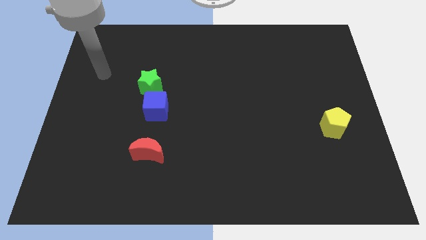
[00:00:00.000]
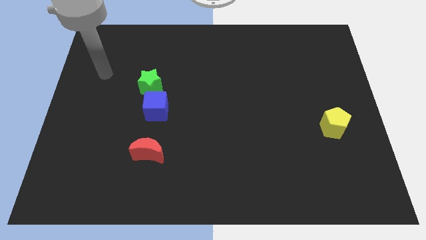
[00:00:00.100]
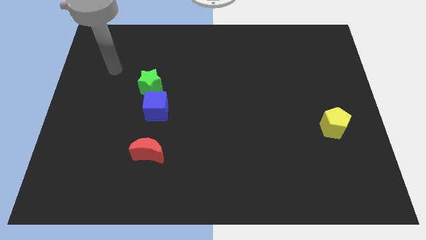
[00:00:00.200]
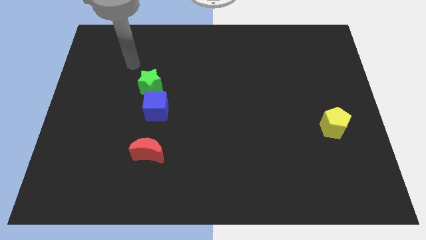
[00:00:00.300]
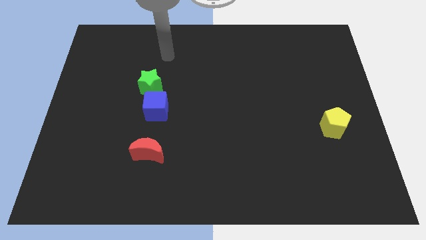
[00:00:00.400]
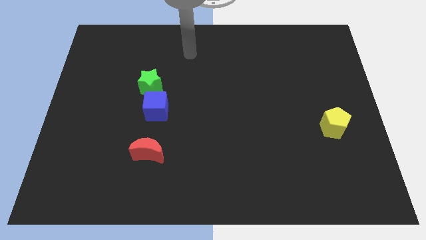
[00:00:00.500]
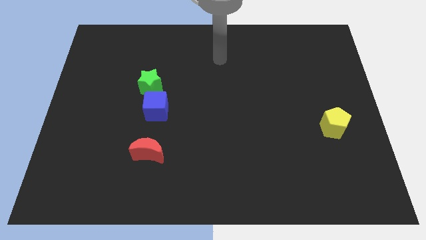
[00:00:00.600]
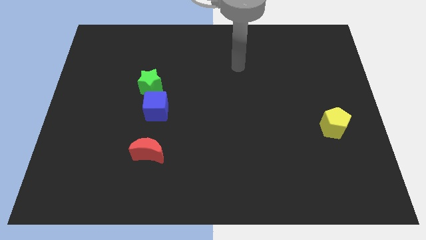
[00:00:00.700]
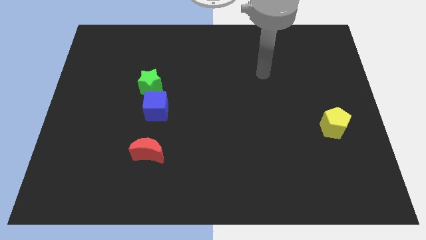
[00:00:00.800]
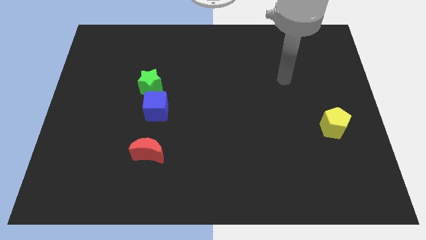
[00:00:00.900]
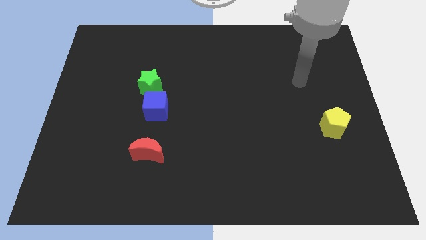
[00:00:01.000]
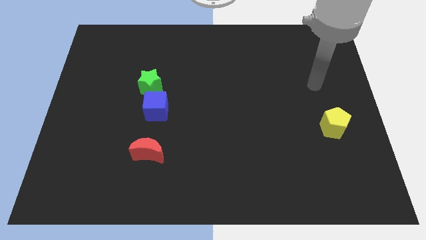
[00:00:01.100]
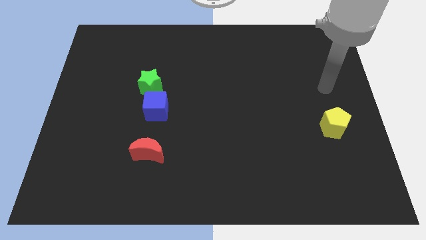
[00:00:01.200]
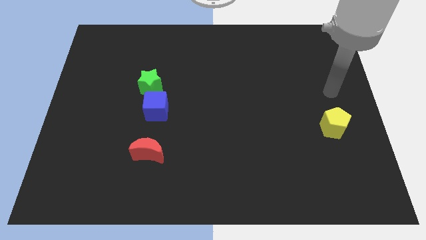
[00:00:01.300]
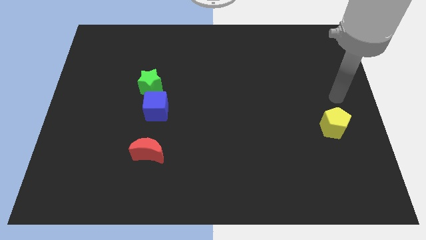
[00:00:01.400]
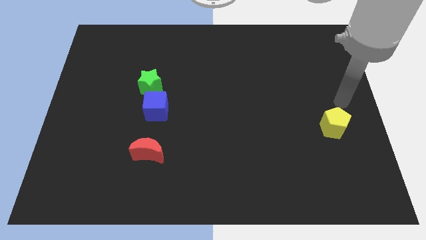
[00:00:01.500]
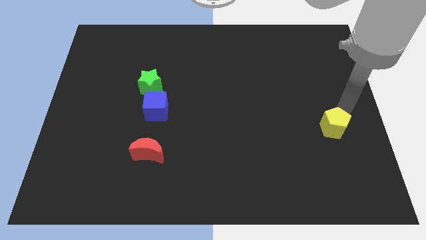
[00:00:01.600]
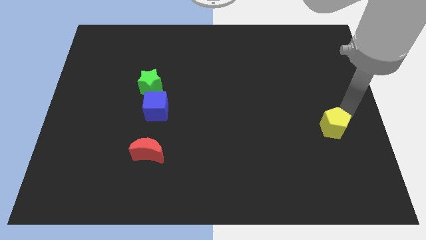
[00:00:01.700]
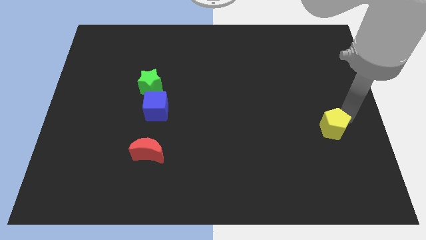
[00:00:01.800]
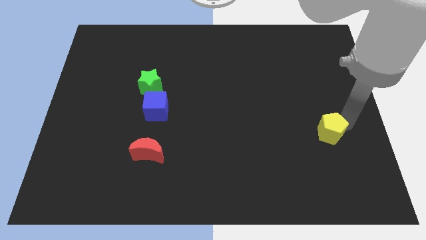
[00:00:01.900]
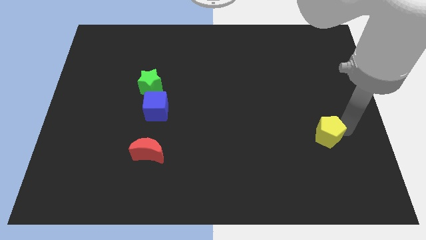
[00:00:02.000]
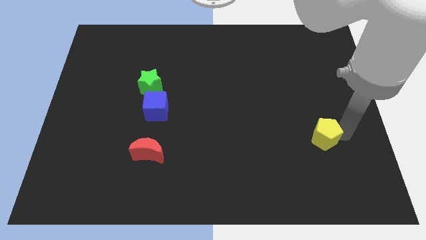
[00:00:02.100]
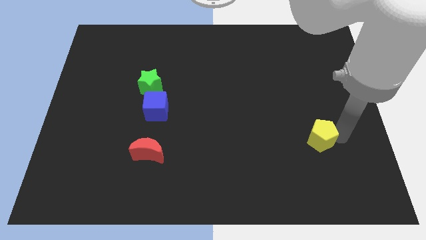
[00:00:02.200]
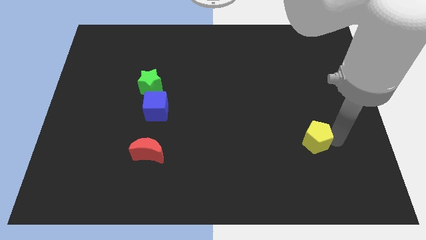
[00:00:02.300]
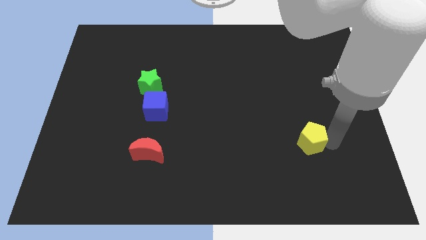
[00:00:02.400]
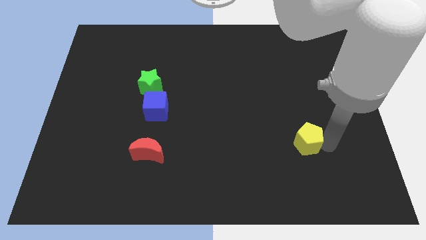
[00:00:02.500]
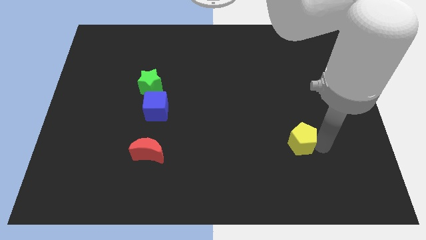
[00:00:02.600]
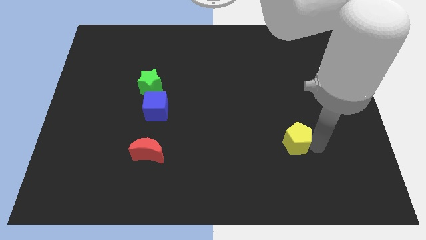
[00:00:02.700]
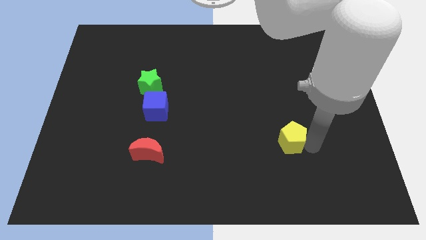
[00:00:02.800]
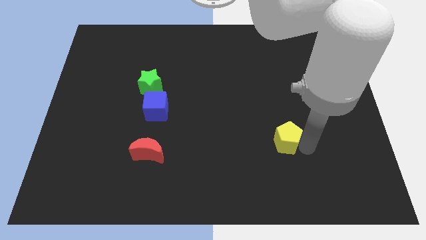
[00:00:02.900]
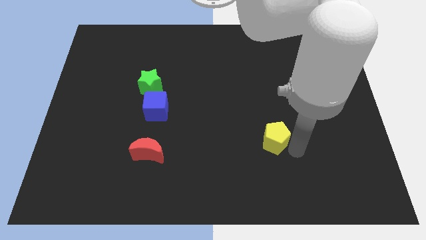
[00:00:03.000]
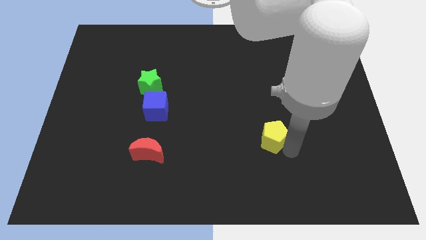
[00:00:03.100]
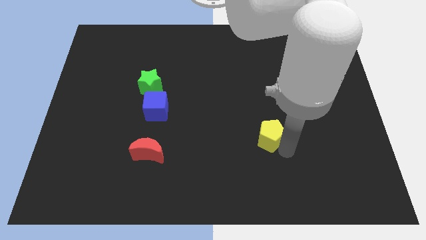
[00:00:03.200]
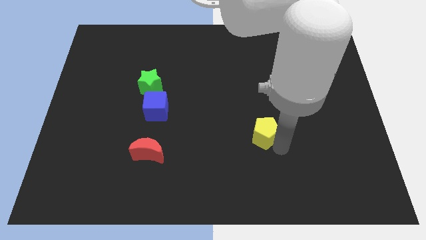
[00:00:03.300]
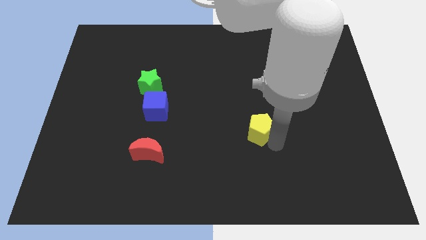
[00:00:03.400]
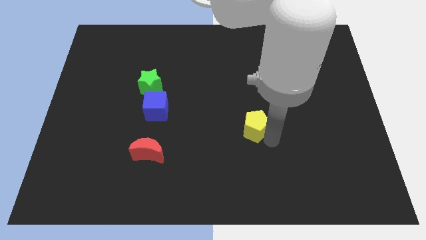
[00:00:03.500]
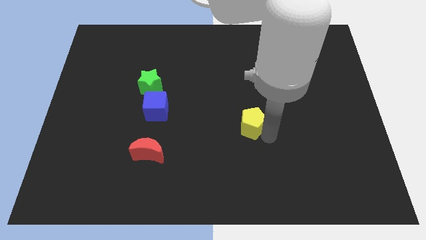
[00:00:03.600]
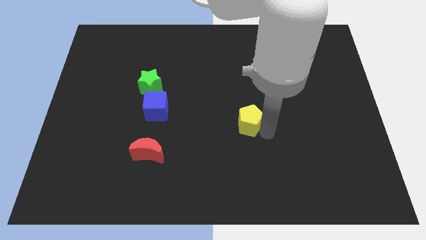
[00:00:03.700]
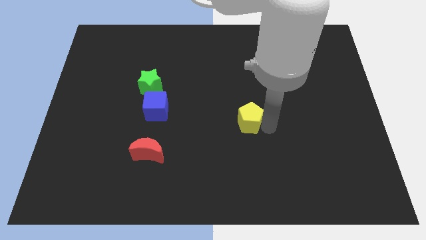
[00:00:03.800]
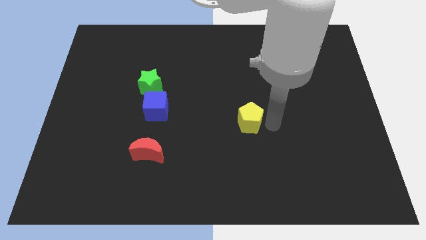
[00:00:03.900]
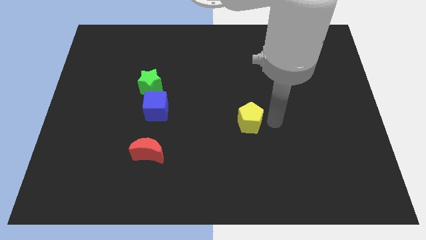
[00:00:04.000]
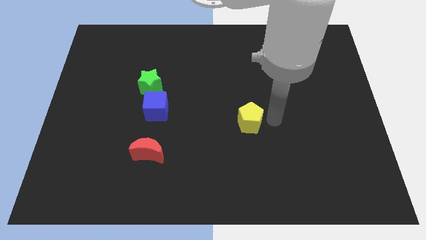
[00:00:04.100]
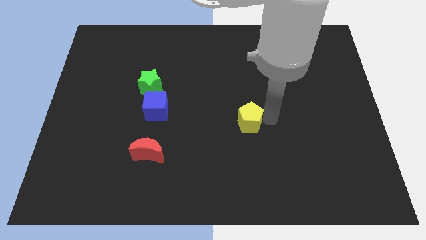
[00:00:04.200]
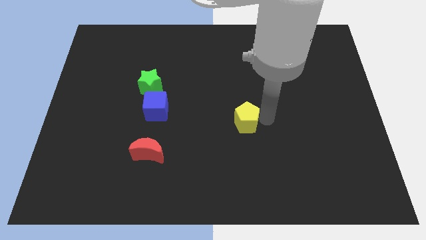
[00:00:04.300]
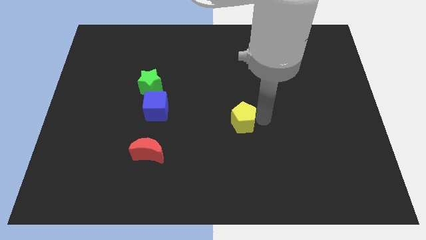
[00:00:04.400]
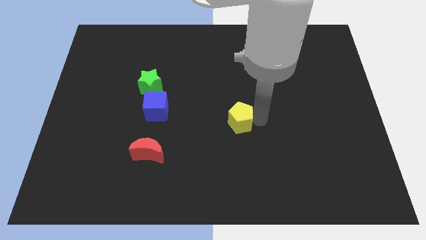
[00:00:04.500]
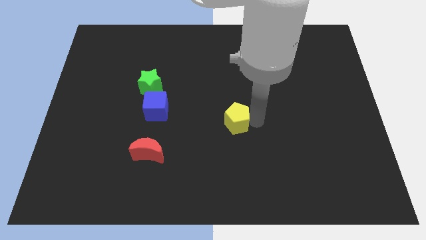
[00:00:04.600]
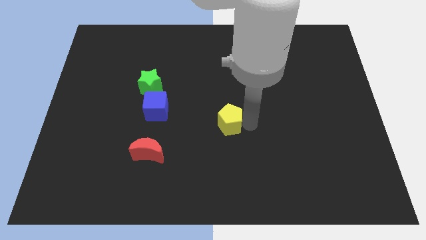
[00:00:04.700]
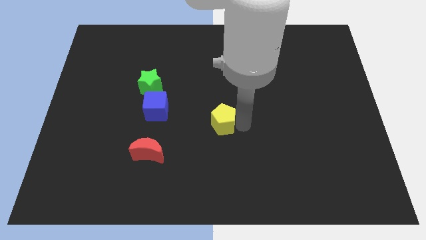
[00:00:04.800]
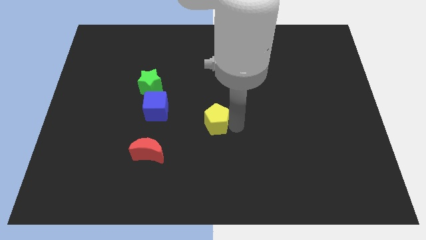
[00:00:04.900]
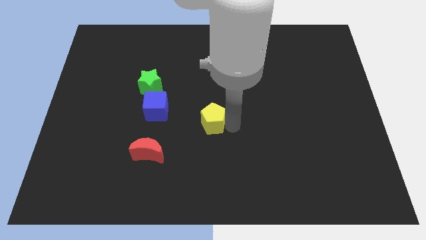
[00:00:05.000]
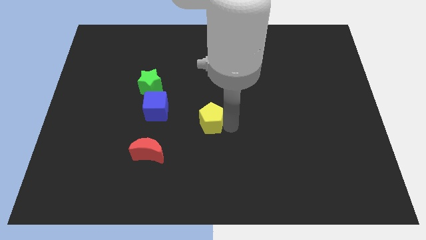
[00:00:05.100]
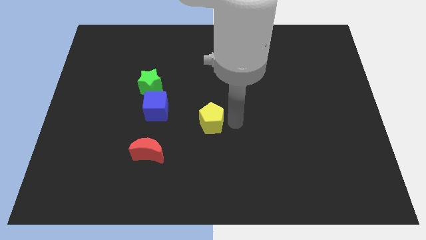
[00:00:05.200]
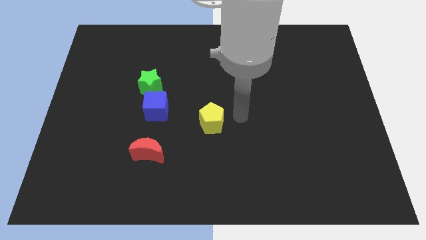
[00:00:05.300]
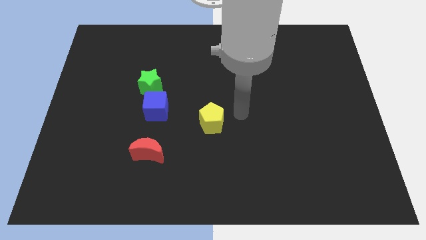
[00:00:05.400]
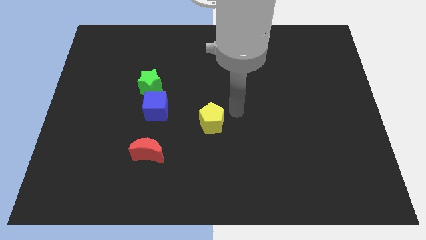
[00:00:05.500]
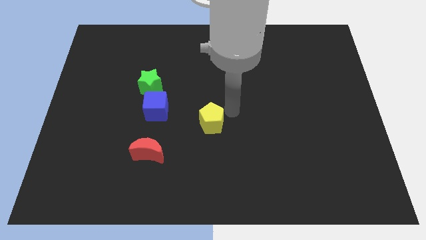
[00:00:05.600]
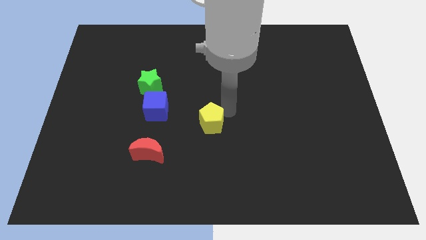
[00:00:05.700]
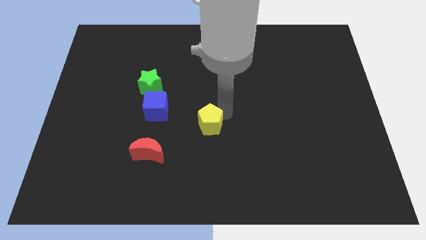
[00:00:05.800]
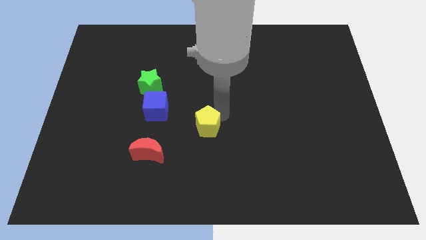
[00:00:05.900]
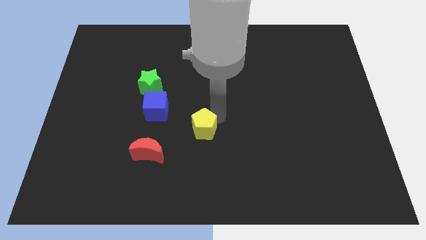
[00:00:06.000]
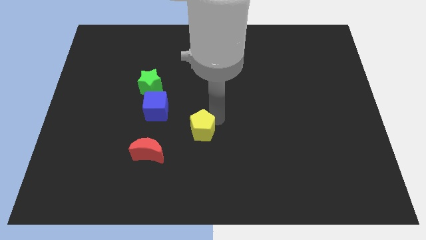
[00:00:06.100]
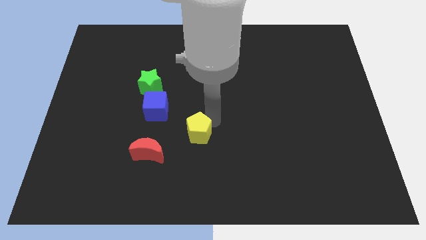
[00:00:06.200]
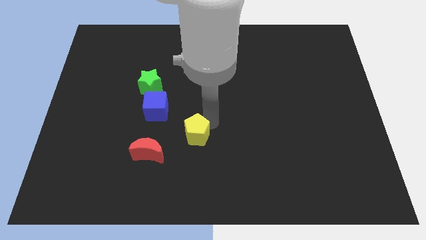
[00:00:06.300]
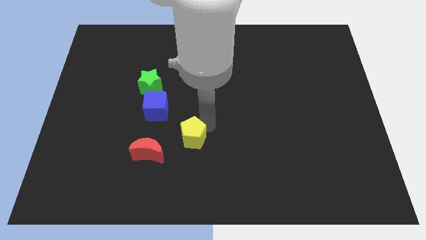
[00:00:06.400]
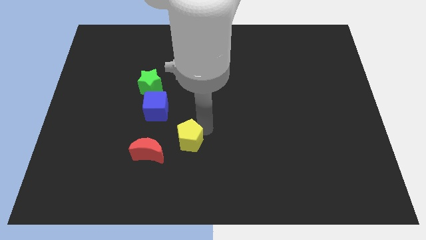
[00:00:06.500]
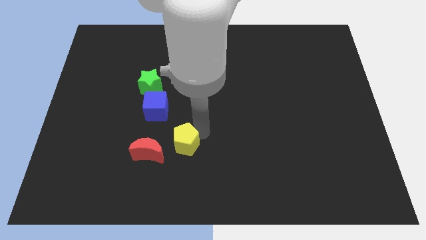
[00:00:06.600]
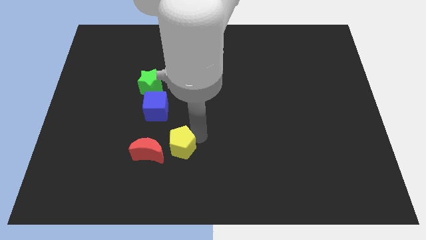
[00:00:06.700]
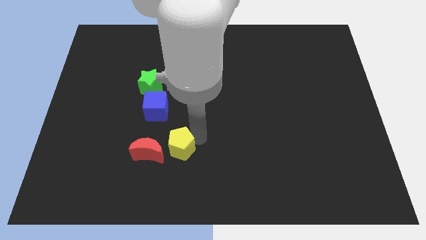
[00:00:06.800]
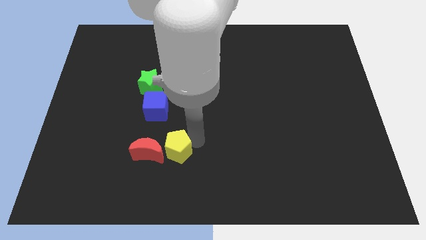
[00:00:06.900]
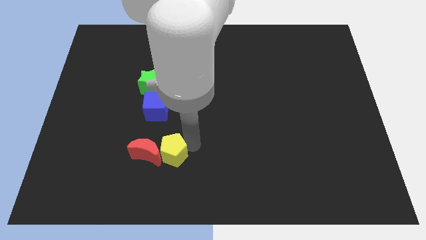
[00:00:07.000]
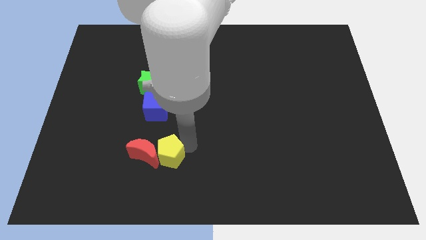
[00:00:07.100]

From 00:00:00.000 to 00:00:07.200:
slide the yellow block to the red block

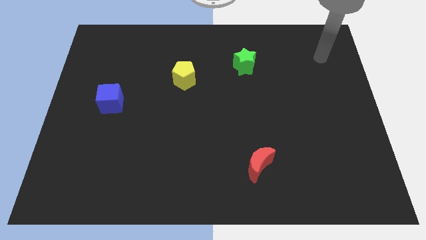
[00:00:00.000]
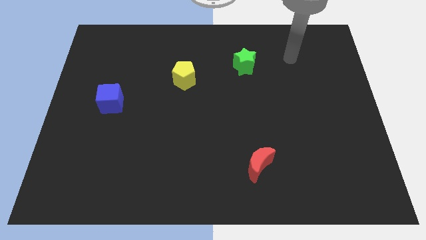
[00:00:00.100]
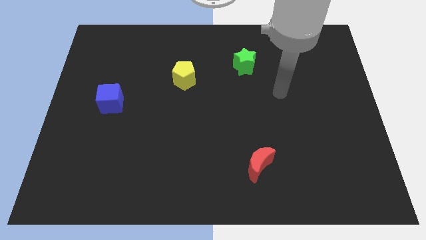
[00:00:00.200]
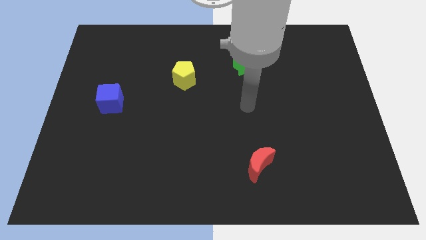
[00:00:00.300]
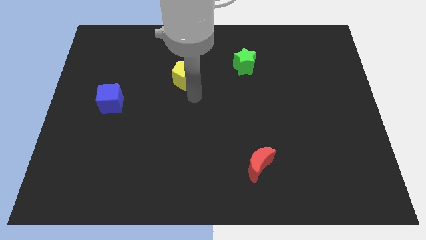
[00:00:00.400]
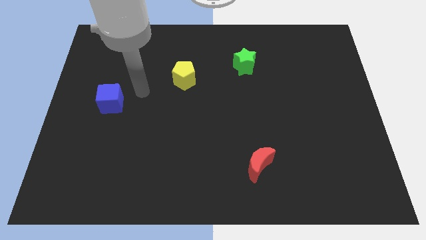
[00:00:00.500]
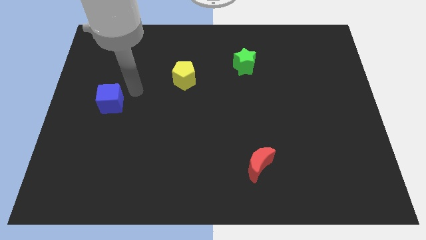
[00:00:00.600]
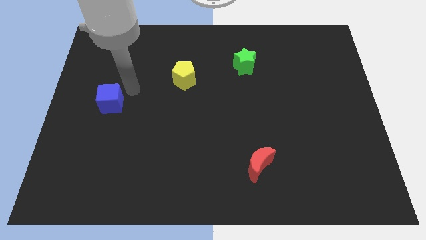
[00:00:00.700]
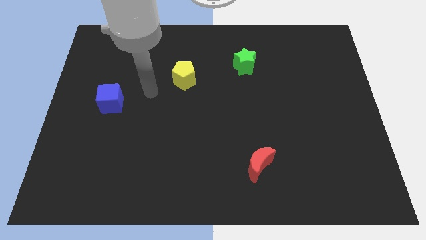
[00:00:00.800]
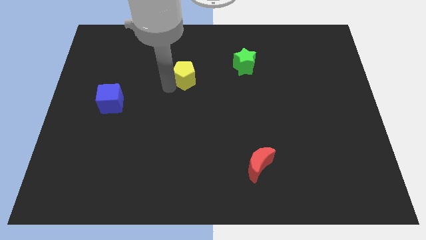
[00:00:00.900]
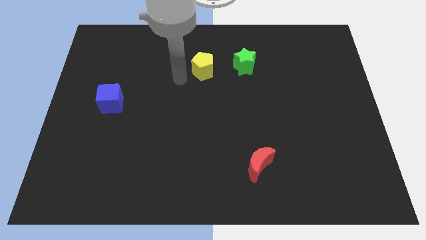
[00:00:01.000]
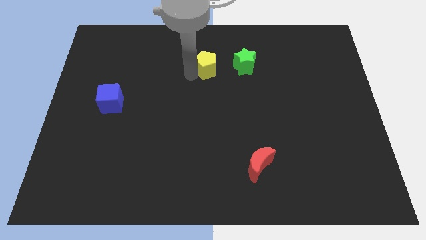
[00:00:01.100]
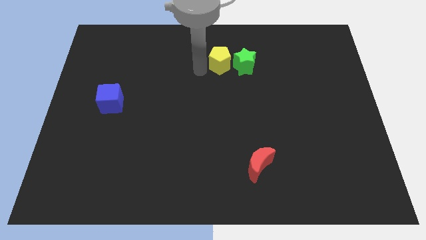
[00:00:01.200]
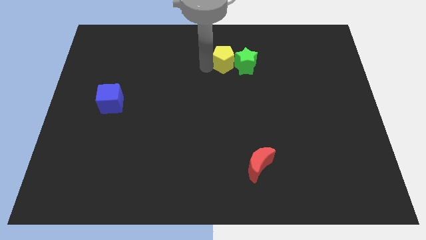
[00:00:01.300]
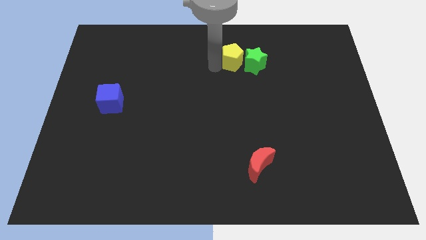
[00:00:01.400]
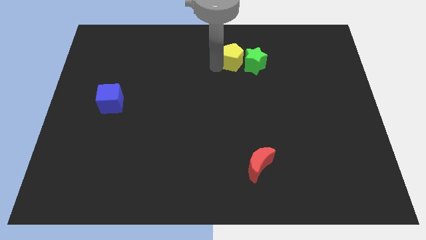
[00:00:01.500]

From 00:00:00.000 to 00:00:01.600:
move the yellow block towards the star
